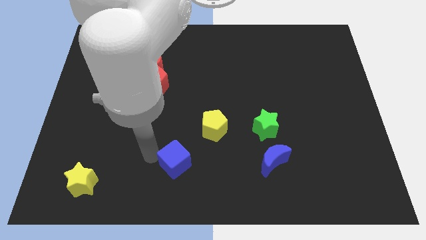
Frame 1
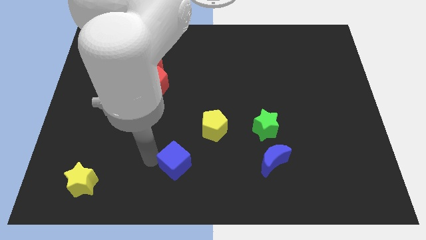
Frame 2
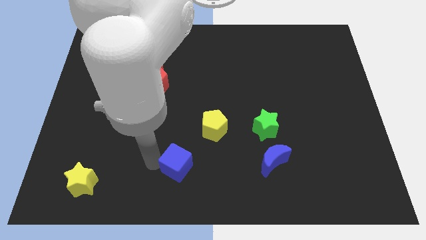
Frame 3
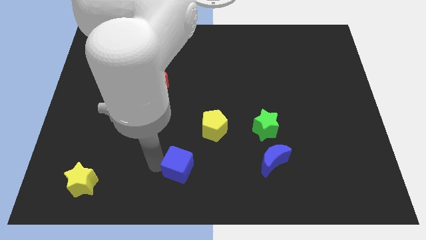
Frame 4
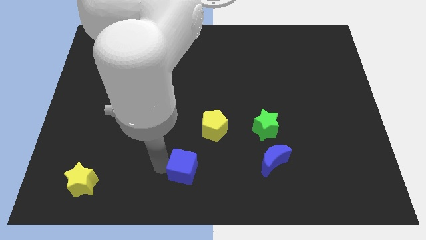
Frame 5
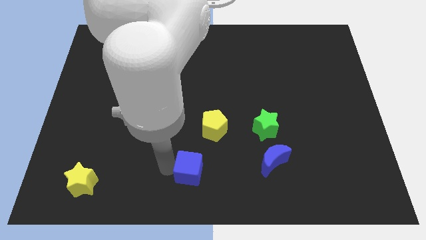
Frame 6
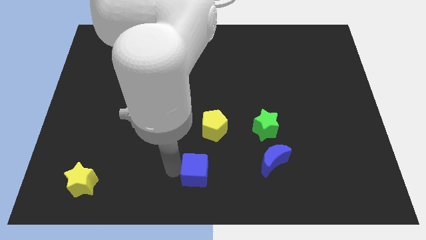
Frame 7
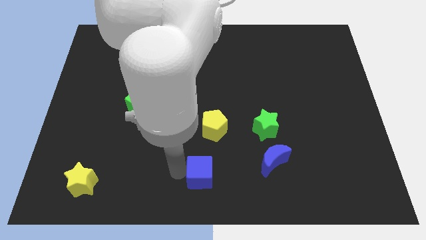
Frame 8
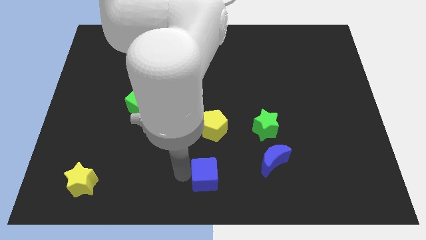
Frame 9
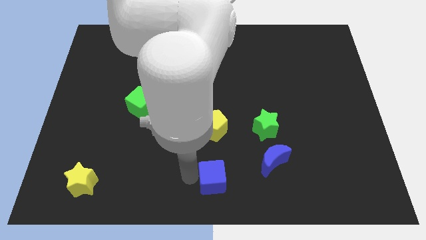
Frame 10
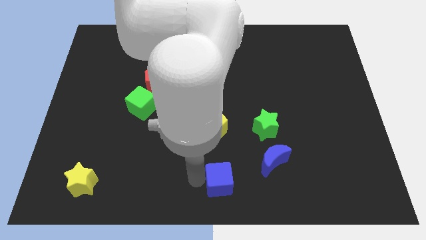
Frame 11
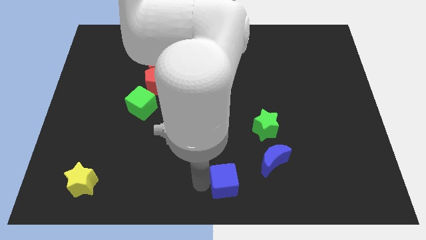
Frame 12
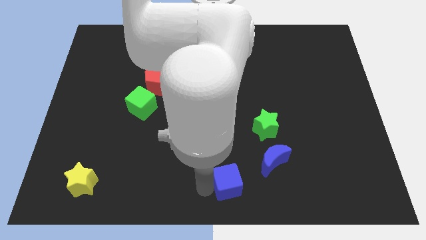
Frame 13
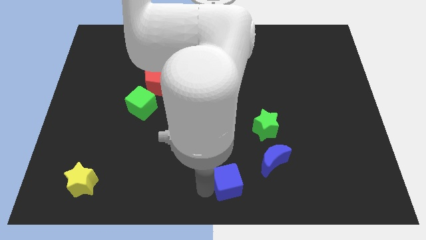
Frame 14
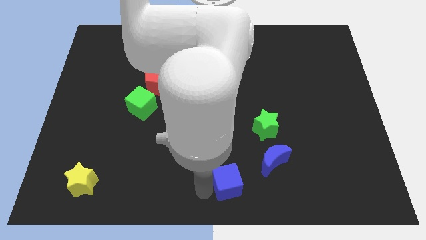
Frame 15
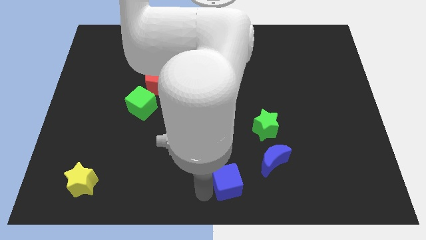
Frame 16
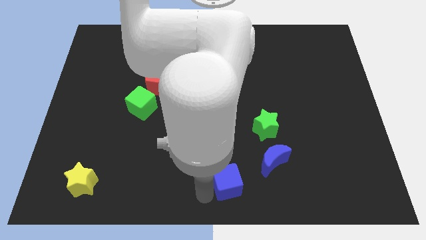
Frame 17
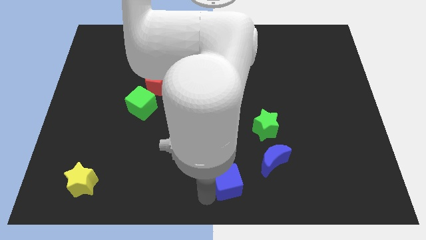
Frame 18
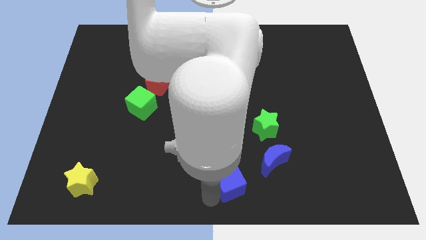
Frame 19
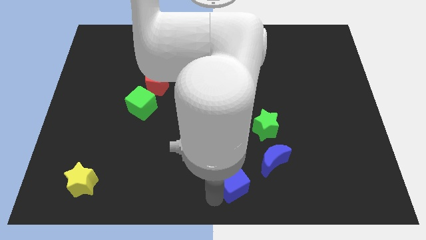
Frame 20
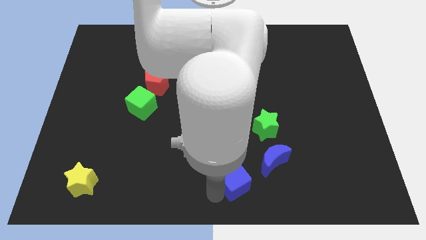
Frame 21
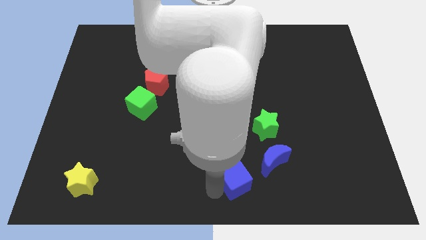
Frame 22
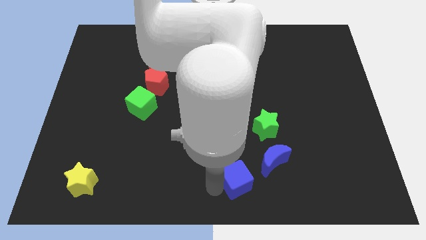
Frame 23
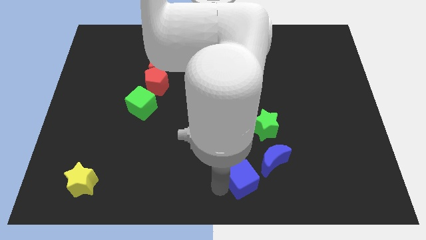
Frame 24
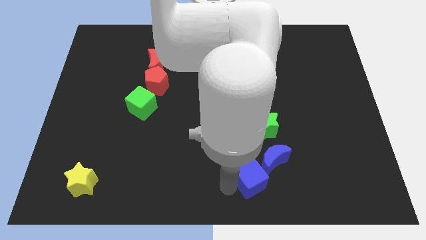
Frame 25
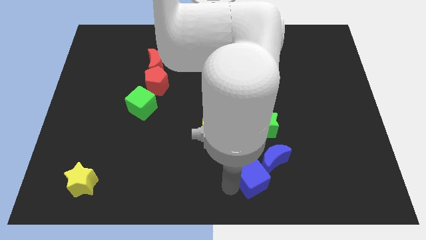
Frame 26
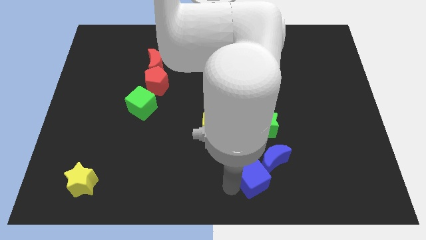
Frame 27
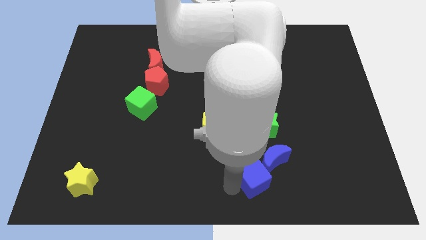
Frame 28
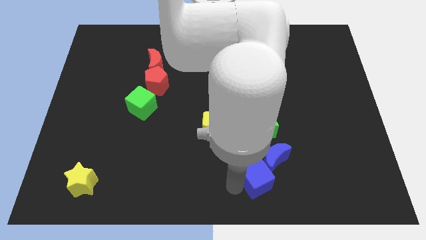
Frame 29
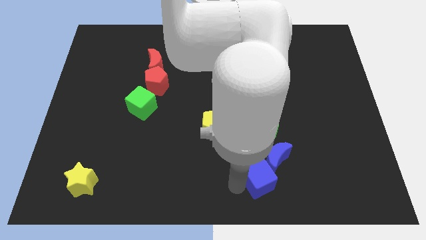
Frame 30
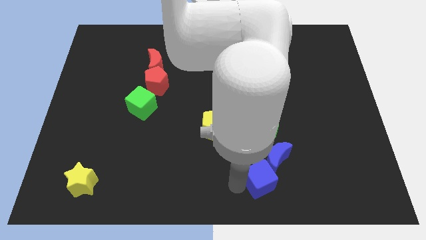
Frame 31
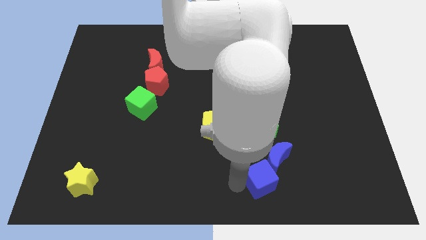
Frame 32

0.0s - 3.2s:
push the blue cube into blue crescent

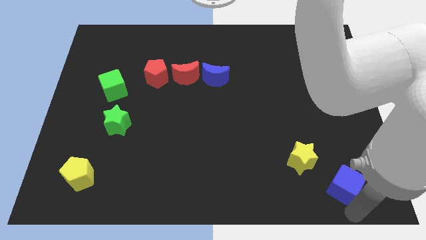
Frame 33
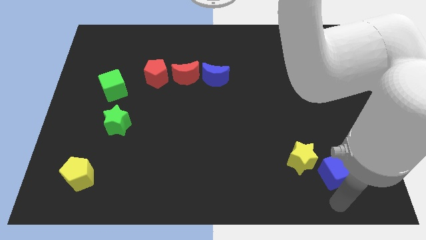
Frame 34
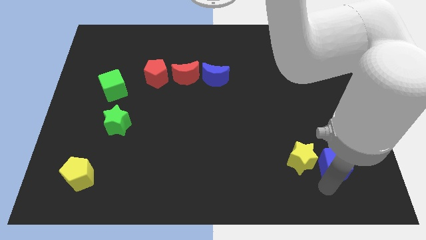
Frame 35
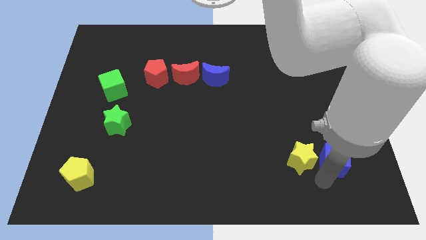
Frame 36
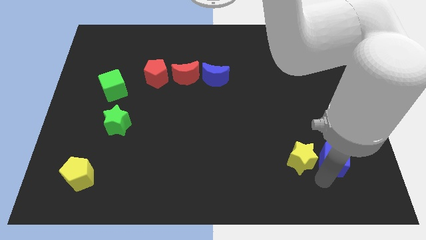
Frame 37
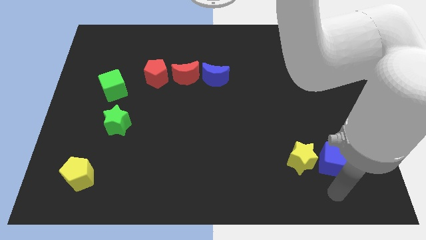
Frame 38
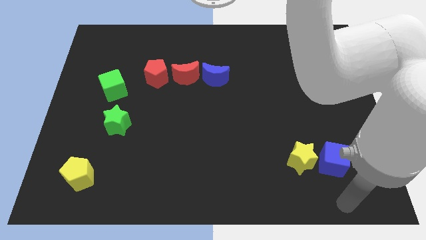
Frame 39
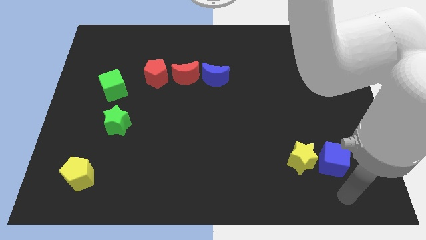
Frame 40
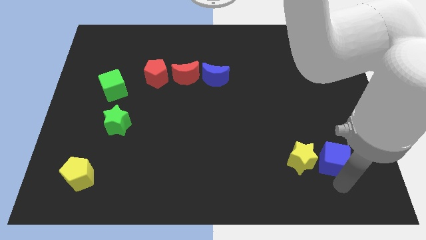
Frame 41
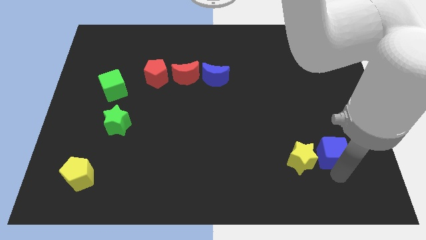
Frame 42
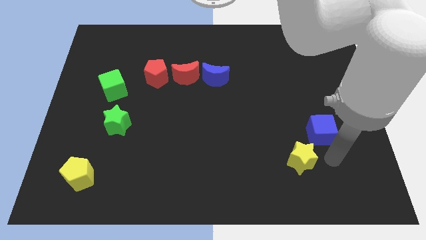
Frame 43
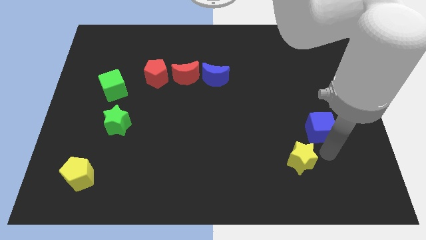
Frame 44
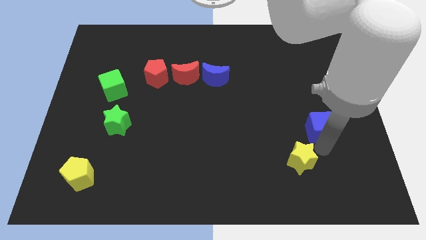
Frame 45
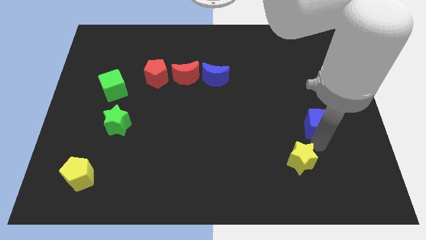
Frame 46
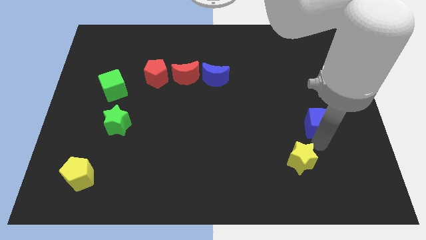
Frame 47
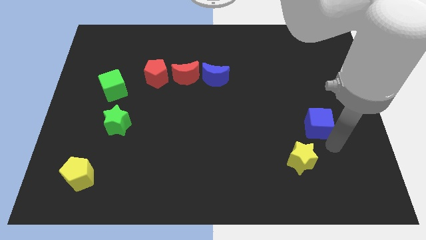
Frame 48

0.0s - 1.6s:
push blue cube to the top right of the yellow star

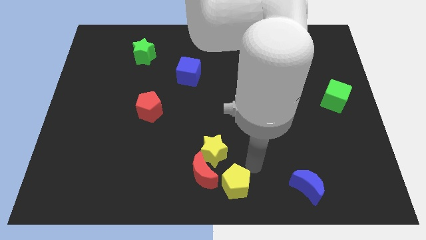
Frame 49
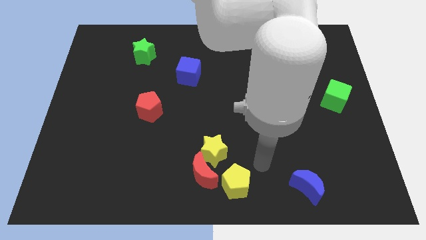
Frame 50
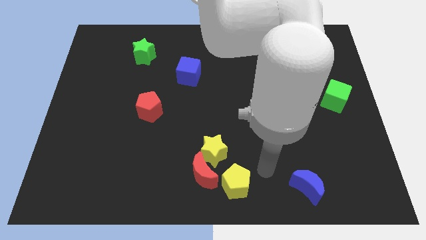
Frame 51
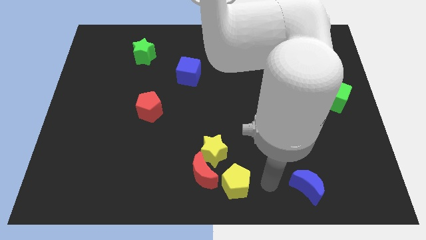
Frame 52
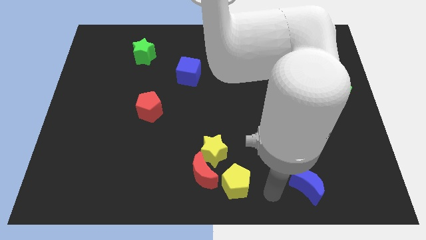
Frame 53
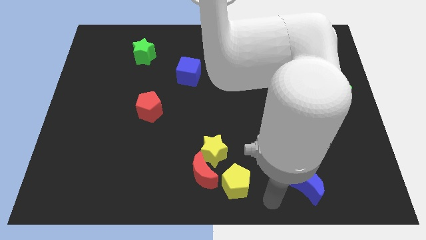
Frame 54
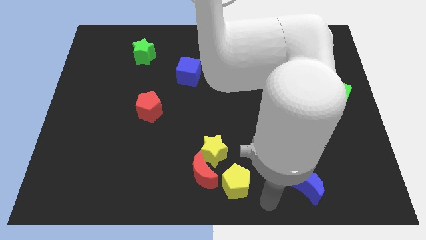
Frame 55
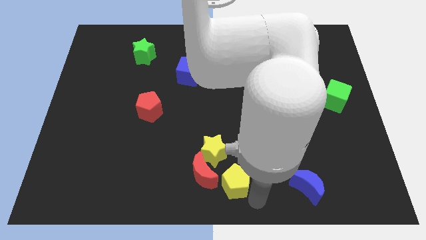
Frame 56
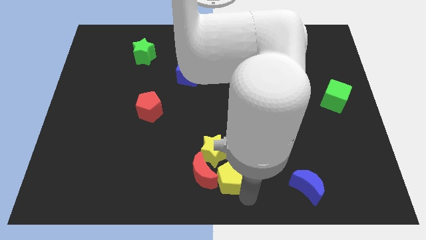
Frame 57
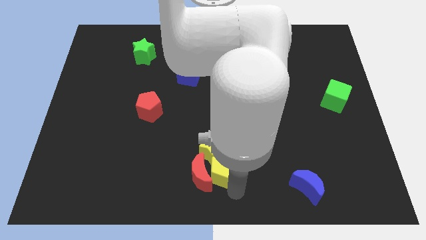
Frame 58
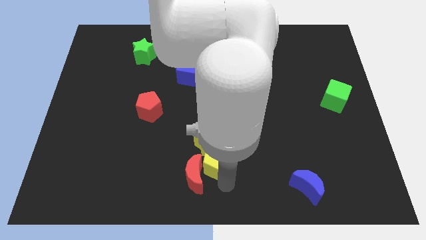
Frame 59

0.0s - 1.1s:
push the yellow pentagon to the bottom of the yellow star

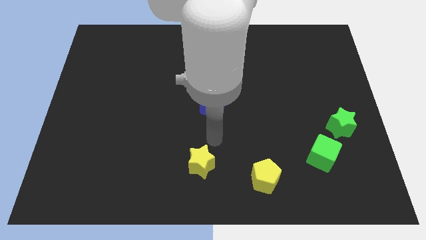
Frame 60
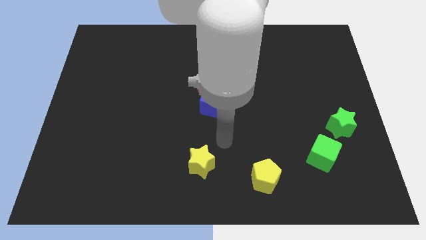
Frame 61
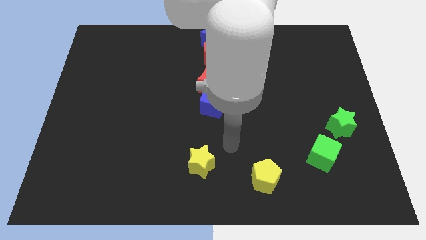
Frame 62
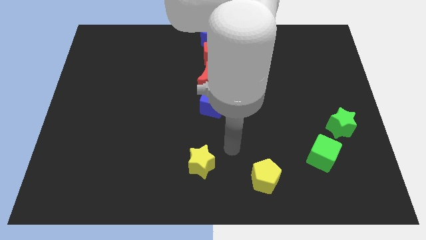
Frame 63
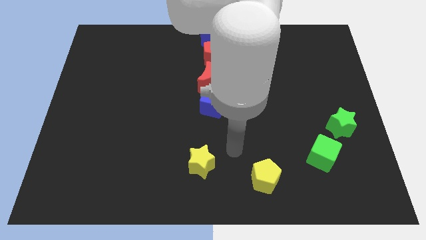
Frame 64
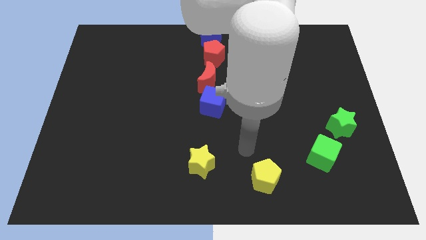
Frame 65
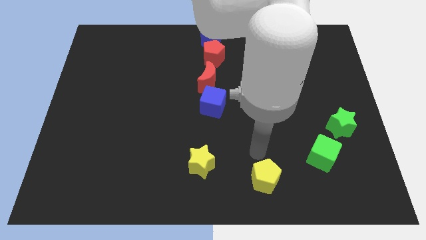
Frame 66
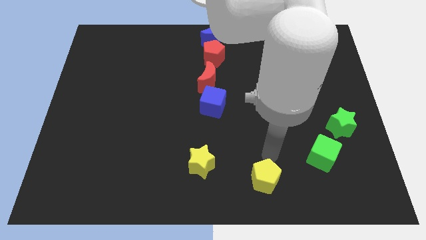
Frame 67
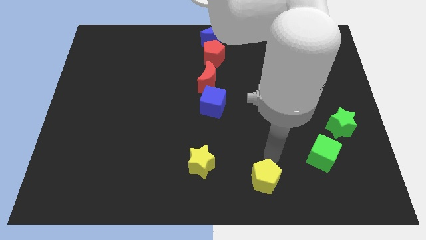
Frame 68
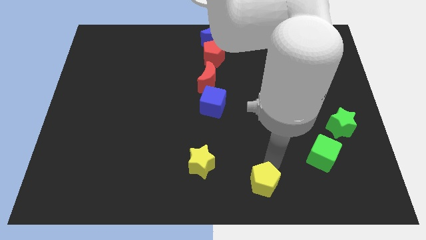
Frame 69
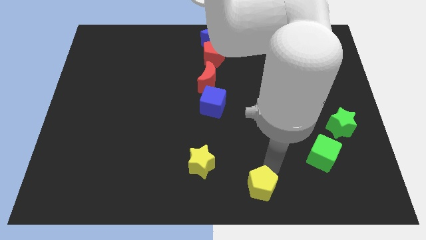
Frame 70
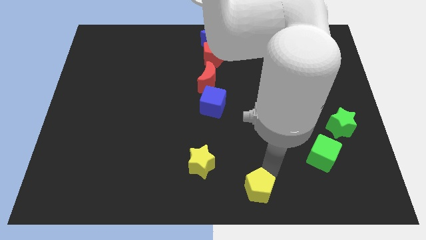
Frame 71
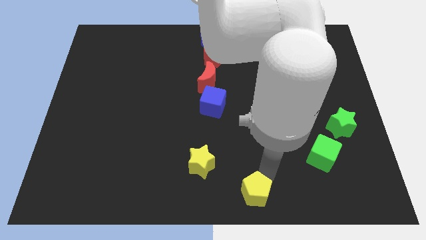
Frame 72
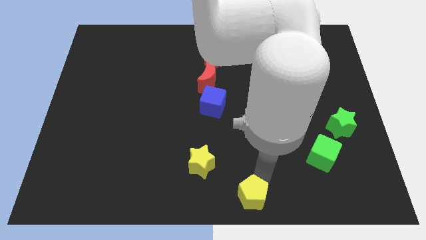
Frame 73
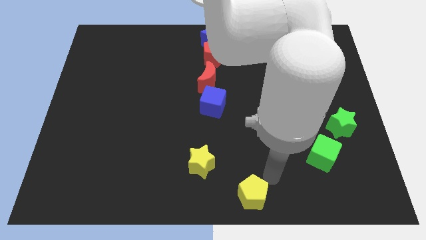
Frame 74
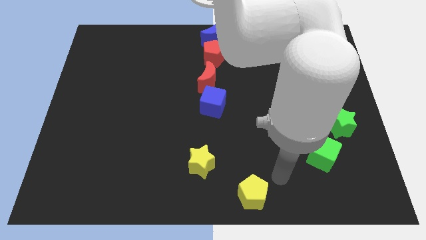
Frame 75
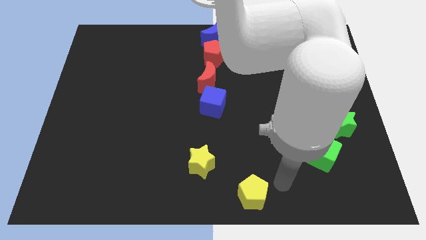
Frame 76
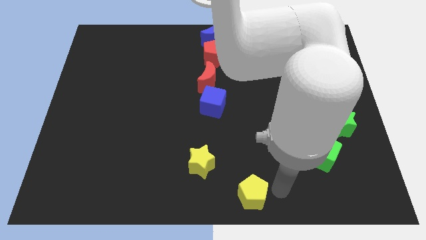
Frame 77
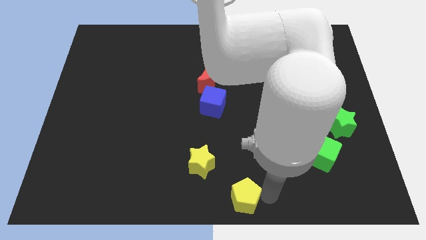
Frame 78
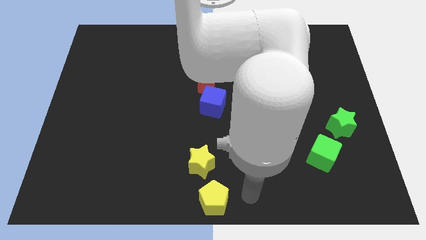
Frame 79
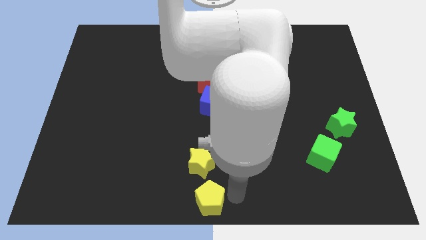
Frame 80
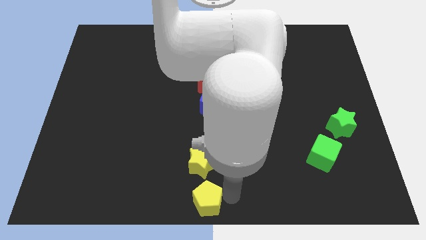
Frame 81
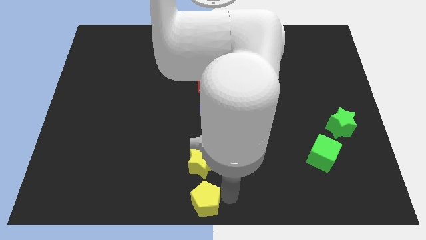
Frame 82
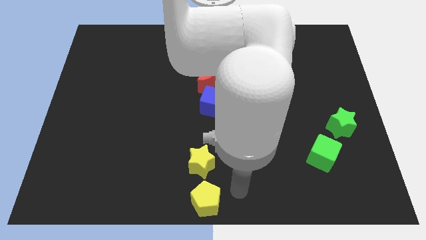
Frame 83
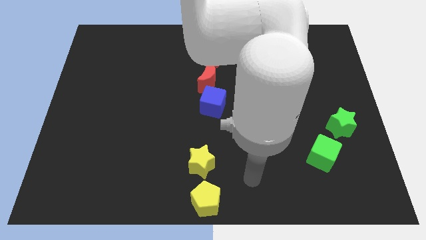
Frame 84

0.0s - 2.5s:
push yellow pentagon below yellow star

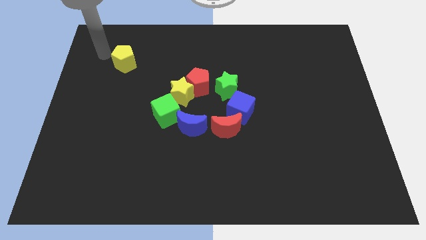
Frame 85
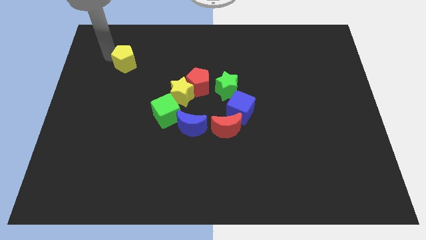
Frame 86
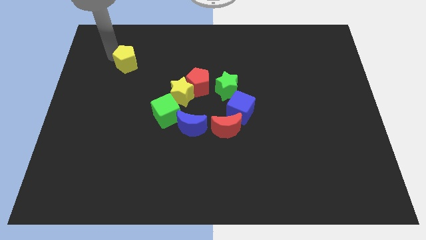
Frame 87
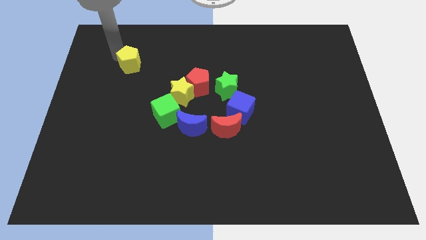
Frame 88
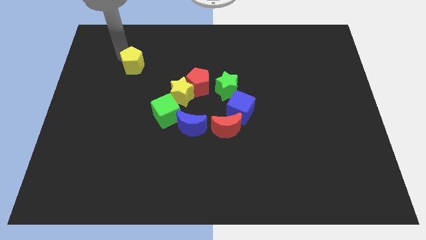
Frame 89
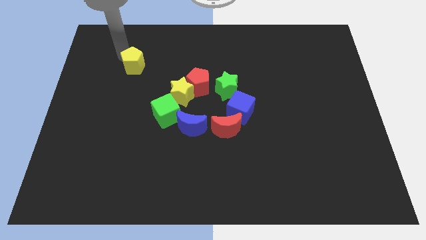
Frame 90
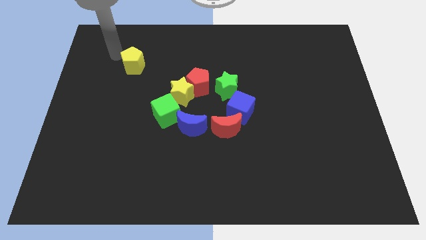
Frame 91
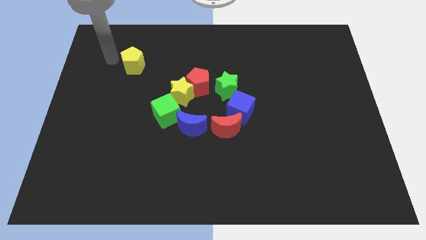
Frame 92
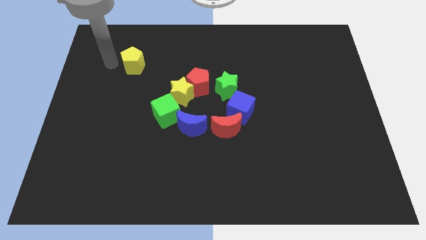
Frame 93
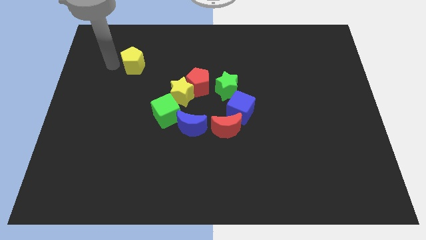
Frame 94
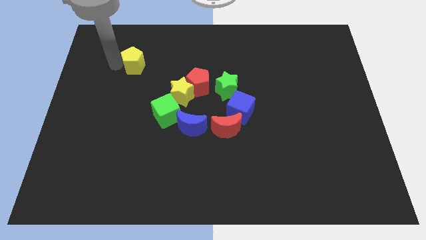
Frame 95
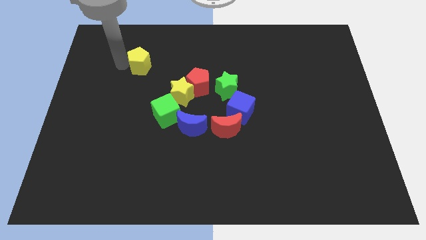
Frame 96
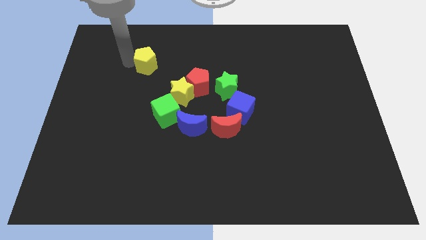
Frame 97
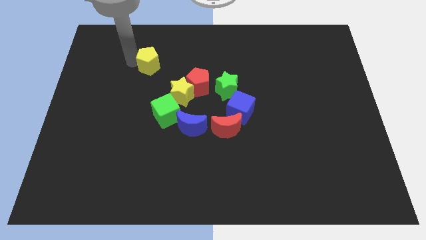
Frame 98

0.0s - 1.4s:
push yellow pentagon diagonally towards green cube
